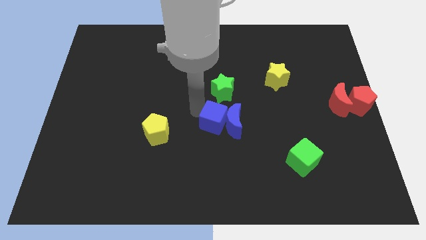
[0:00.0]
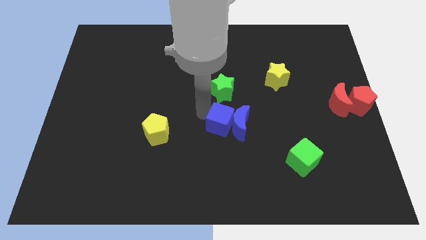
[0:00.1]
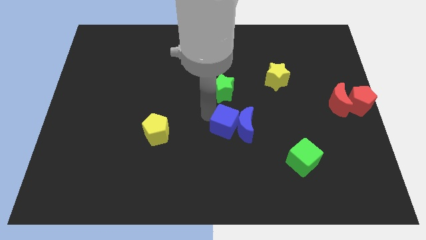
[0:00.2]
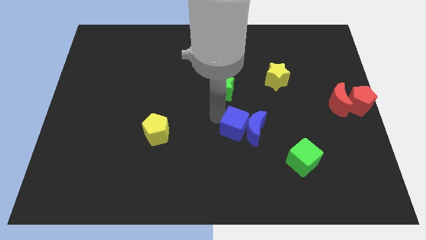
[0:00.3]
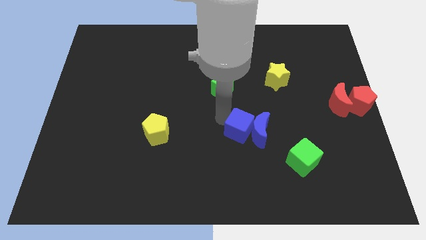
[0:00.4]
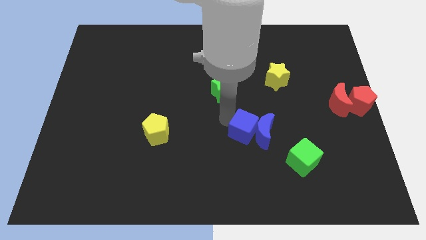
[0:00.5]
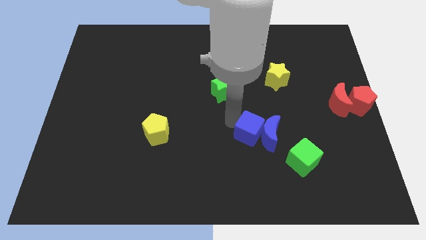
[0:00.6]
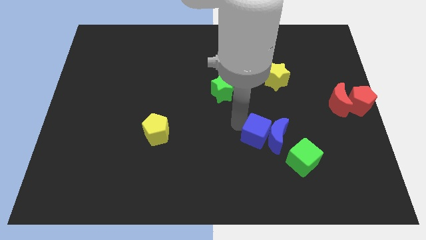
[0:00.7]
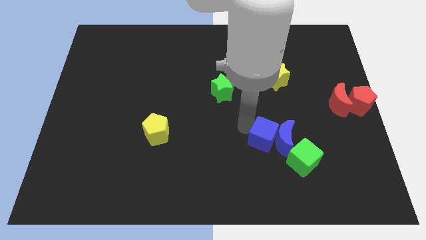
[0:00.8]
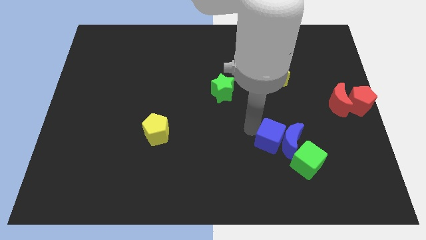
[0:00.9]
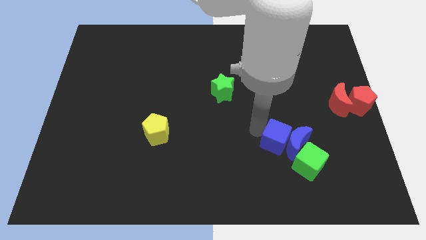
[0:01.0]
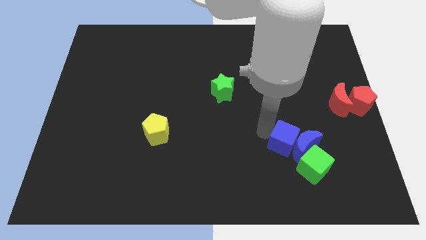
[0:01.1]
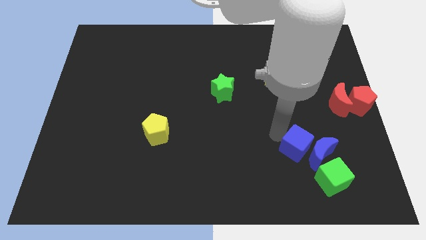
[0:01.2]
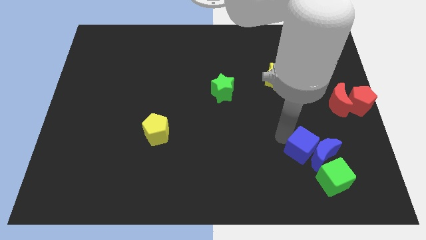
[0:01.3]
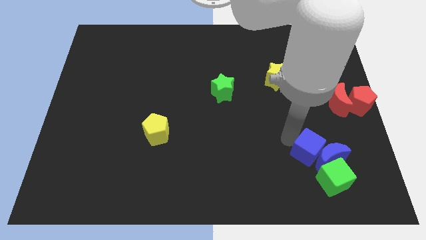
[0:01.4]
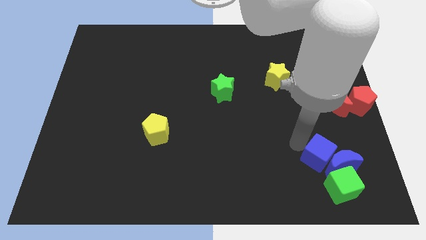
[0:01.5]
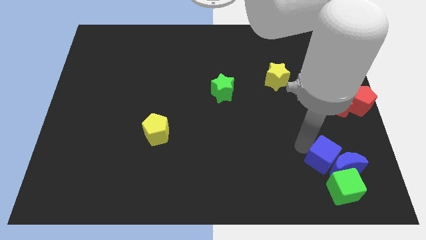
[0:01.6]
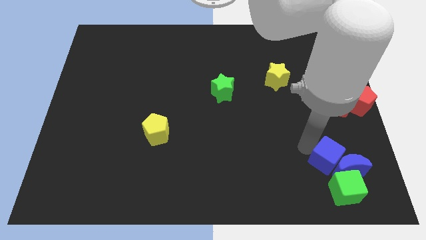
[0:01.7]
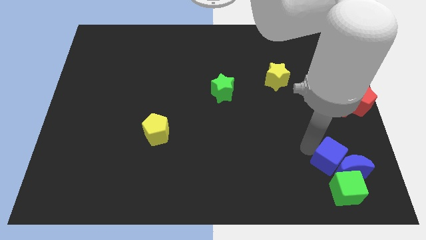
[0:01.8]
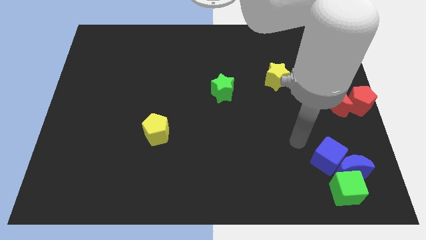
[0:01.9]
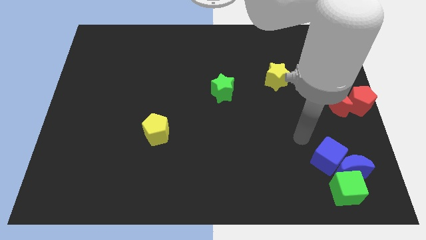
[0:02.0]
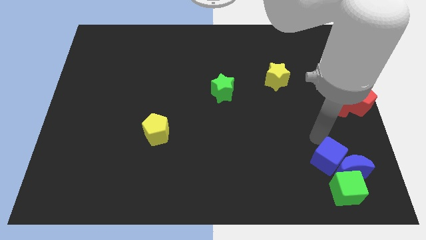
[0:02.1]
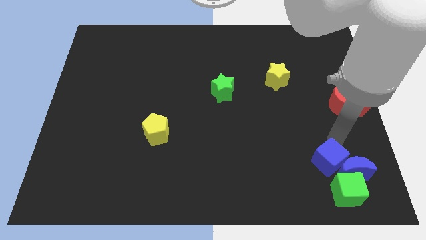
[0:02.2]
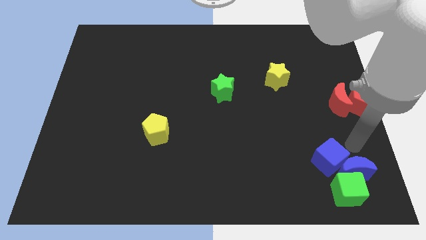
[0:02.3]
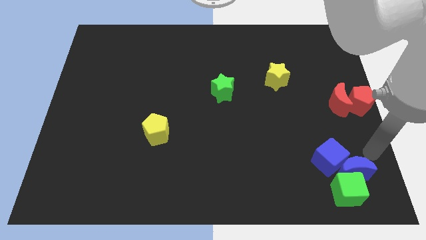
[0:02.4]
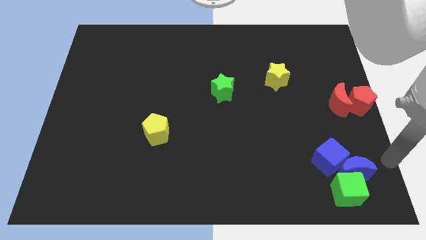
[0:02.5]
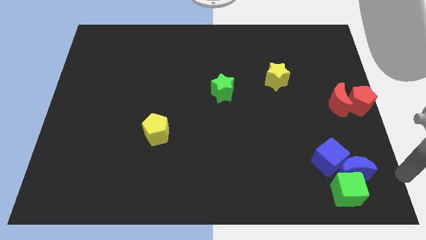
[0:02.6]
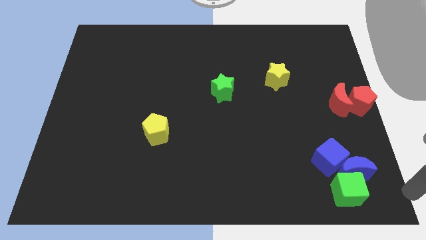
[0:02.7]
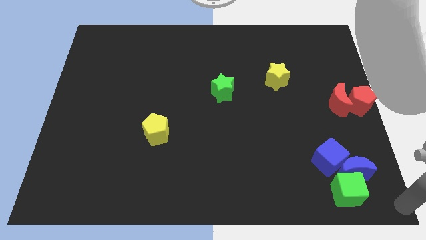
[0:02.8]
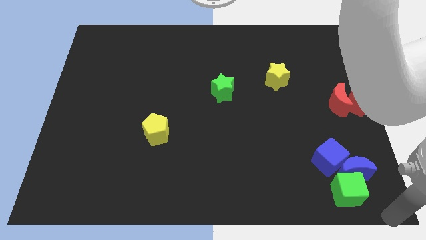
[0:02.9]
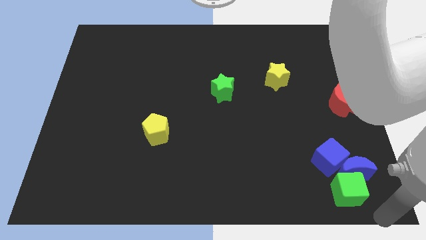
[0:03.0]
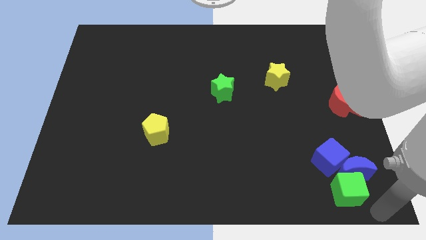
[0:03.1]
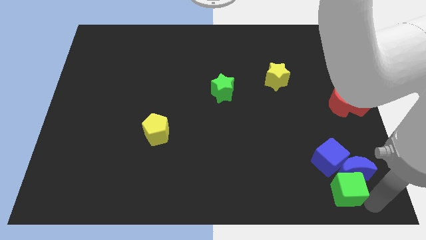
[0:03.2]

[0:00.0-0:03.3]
slide both the blue blocks into the green cube

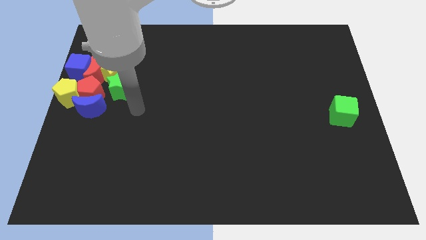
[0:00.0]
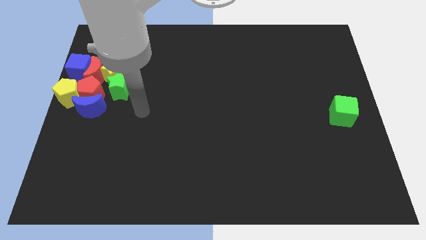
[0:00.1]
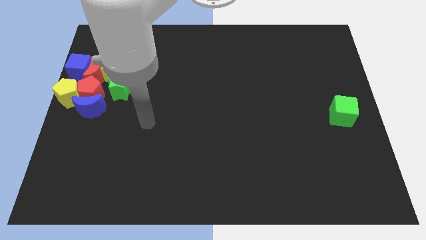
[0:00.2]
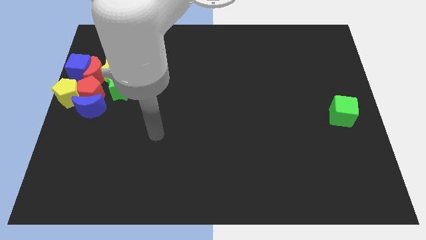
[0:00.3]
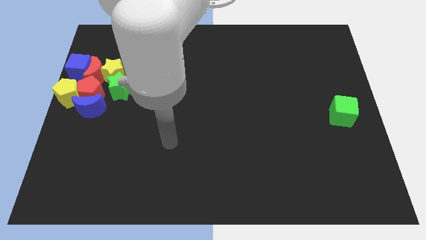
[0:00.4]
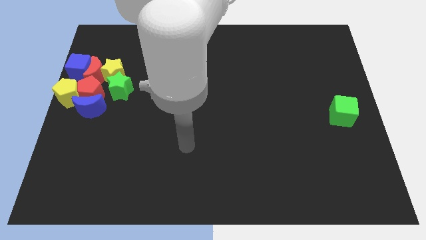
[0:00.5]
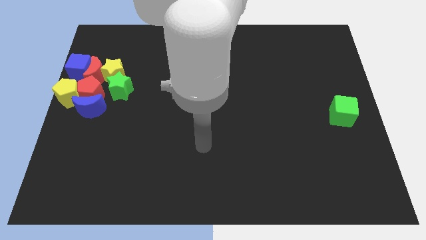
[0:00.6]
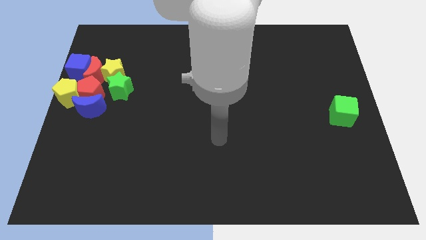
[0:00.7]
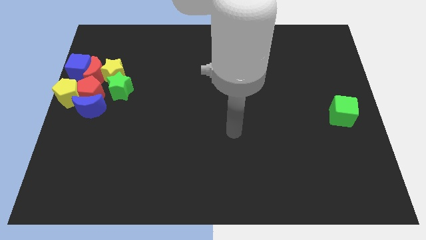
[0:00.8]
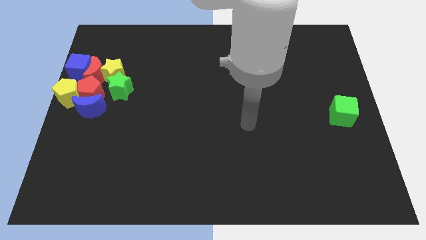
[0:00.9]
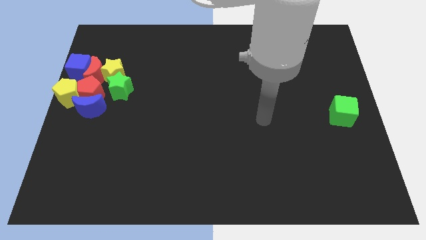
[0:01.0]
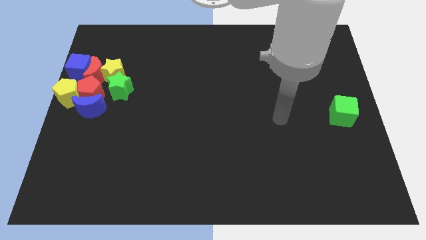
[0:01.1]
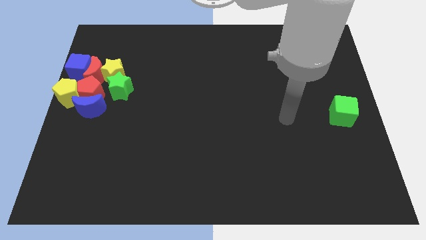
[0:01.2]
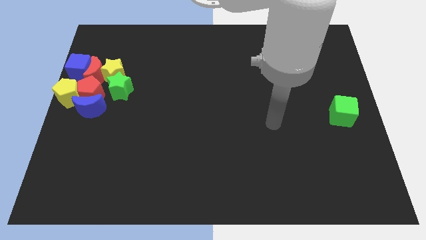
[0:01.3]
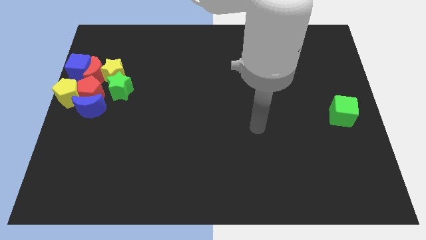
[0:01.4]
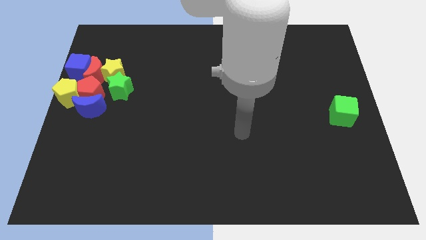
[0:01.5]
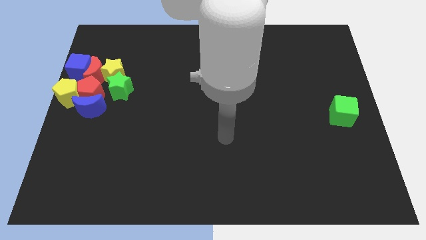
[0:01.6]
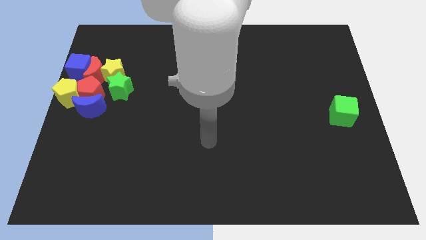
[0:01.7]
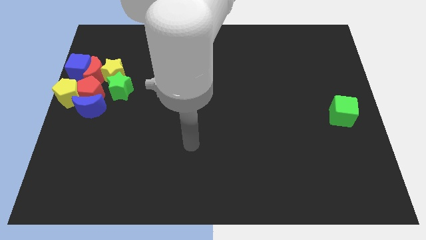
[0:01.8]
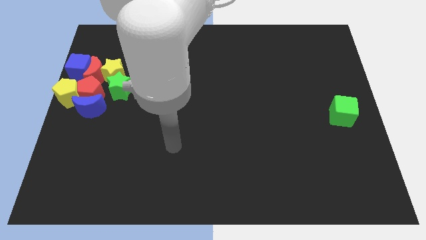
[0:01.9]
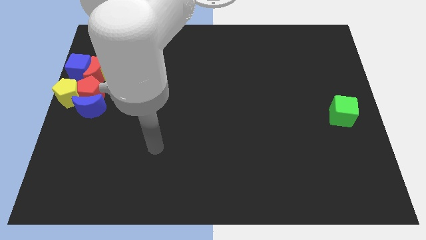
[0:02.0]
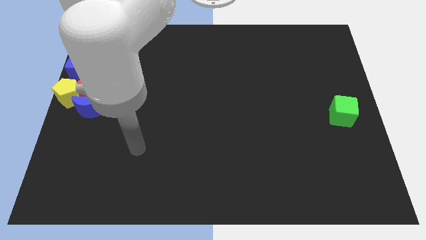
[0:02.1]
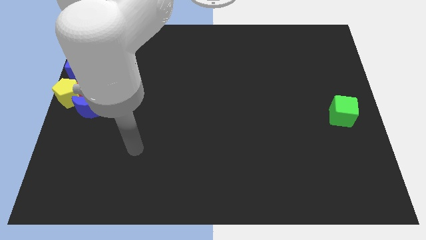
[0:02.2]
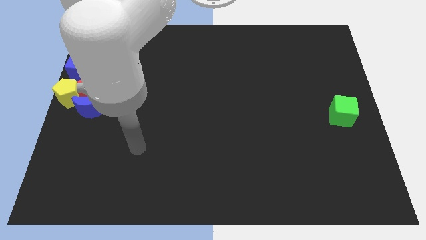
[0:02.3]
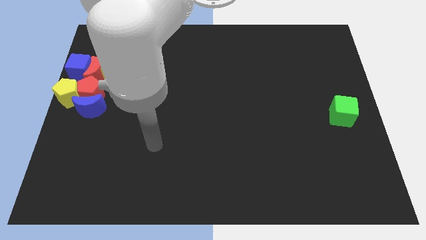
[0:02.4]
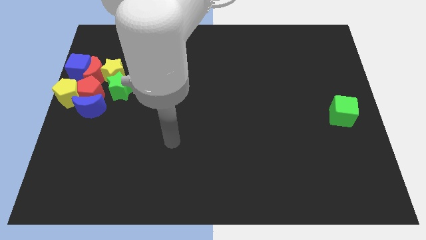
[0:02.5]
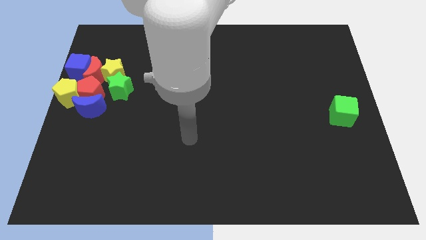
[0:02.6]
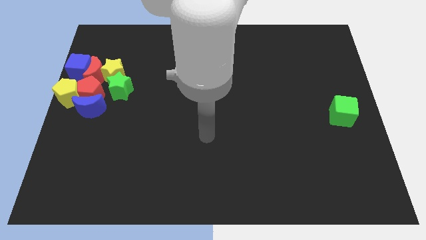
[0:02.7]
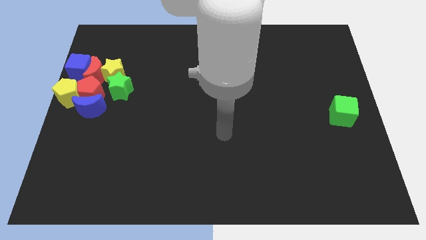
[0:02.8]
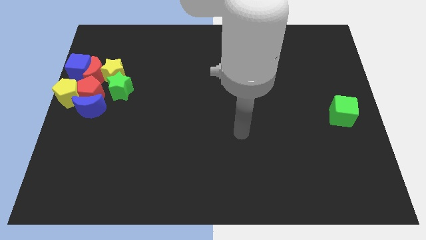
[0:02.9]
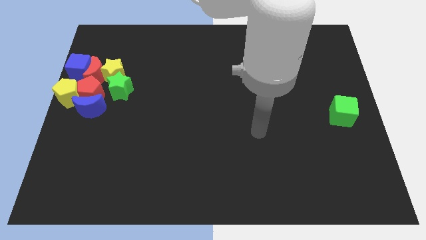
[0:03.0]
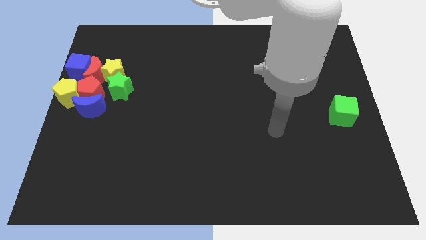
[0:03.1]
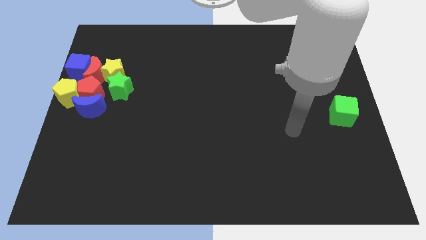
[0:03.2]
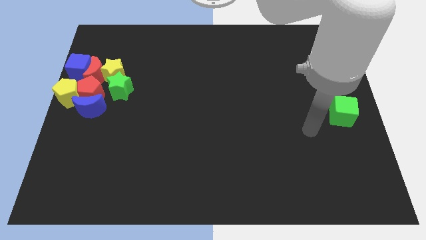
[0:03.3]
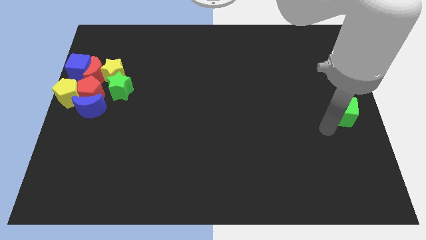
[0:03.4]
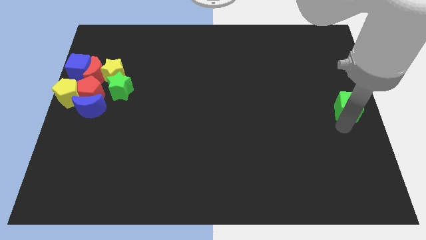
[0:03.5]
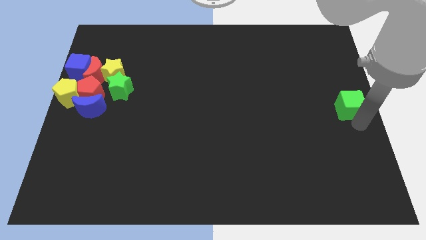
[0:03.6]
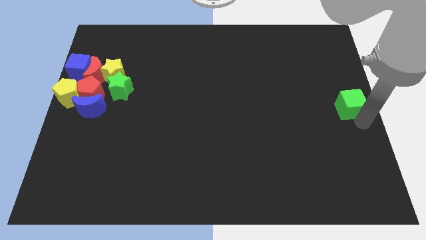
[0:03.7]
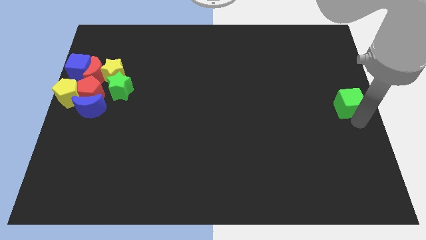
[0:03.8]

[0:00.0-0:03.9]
move your arm close to the green cube

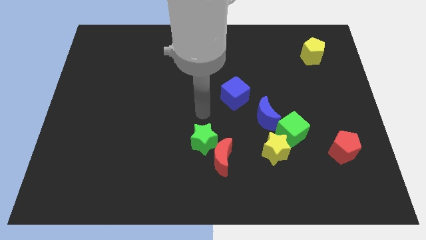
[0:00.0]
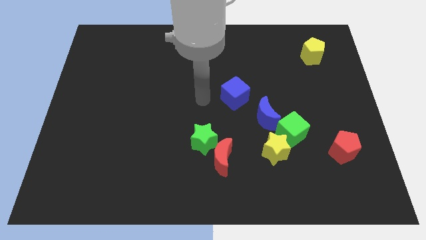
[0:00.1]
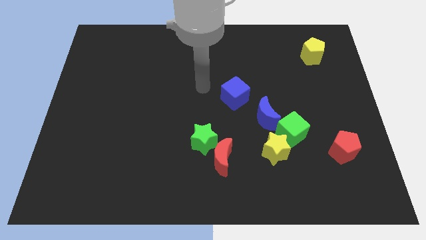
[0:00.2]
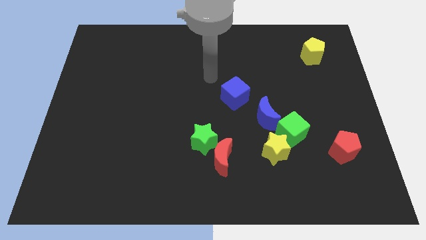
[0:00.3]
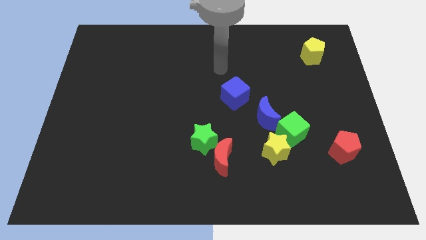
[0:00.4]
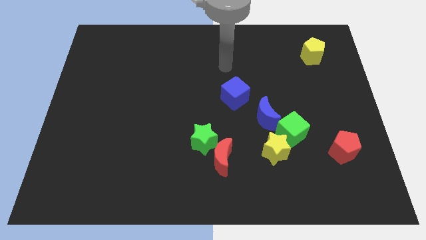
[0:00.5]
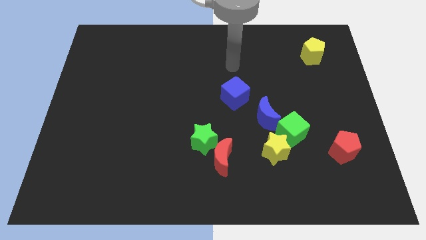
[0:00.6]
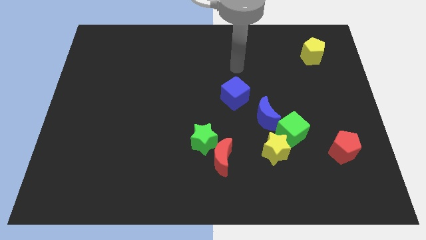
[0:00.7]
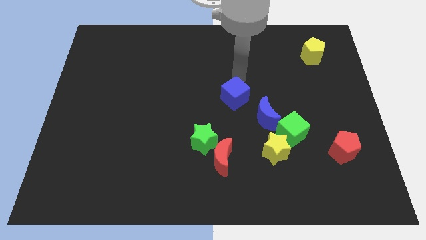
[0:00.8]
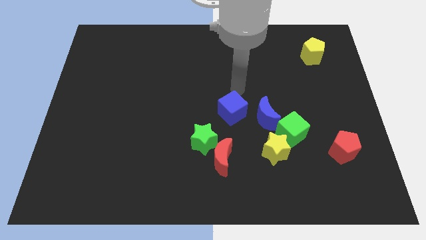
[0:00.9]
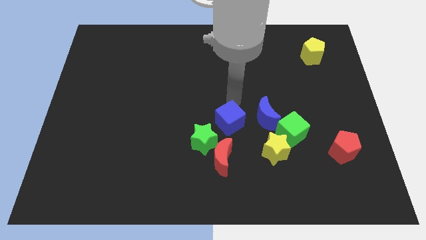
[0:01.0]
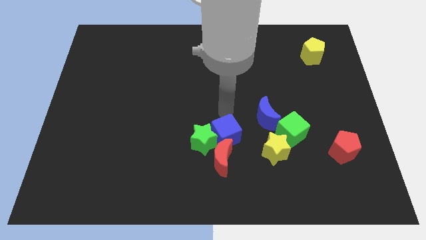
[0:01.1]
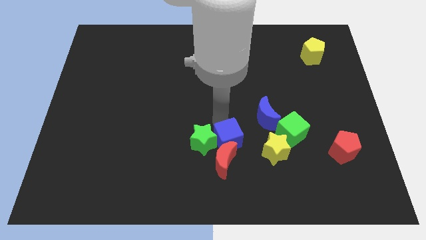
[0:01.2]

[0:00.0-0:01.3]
move the blue cube towards the red crescent

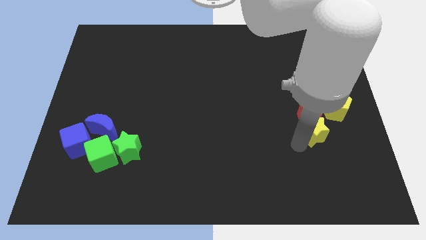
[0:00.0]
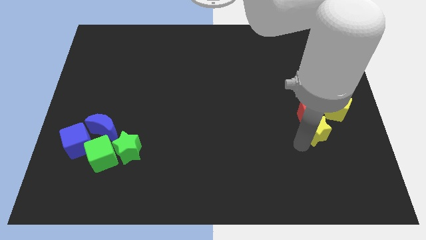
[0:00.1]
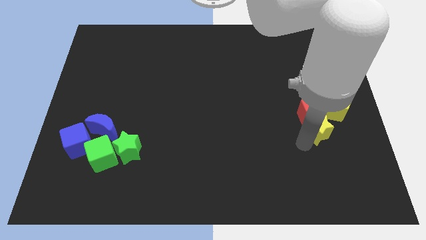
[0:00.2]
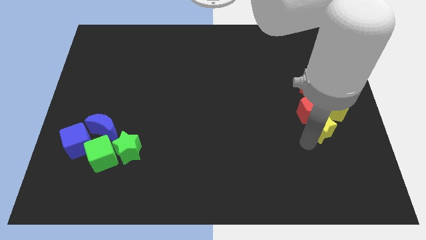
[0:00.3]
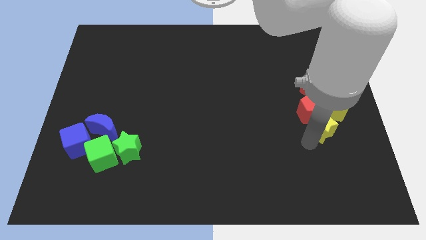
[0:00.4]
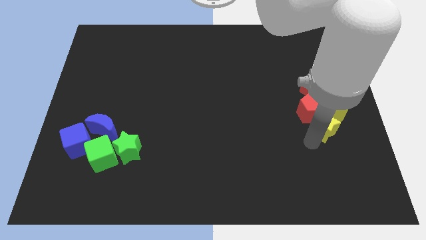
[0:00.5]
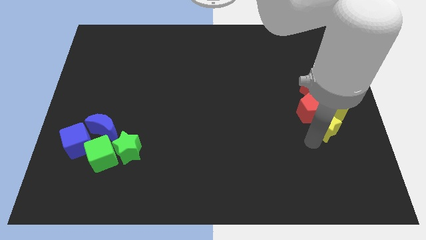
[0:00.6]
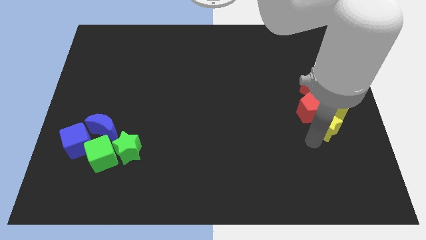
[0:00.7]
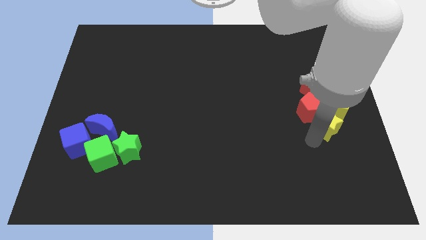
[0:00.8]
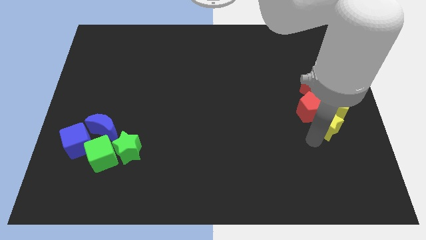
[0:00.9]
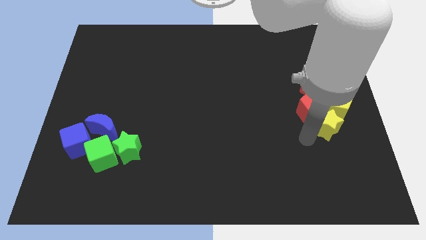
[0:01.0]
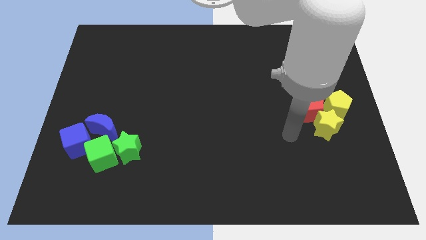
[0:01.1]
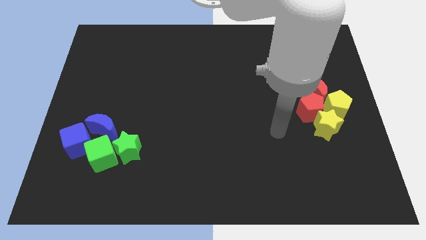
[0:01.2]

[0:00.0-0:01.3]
push the red pentagon into the red crescent with the yellow star towards the right center of the board
